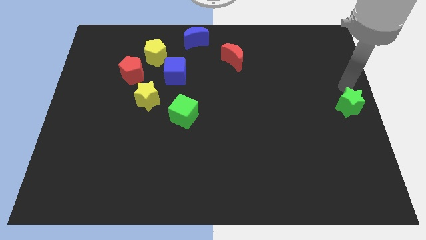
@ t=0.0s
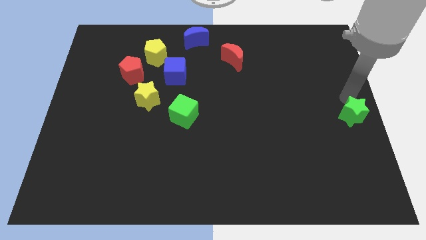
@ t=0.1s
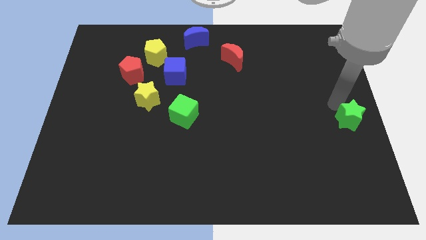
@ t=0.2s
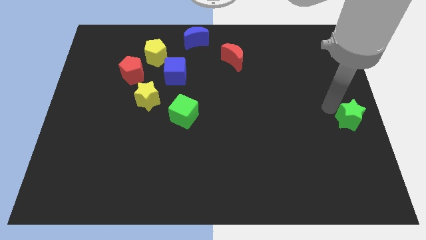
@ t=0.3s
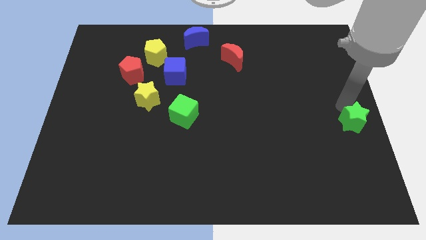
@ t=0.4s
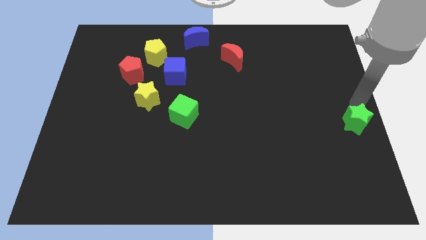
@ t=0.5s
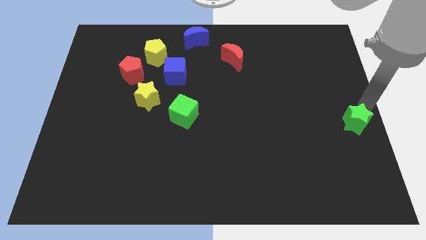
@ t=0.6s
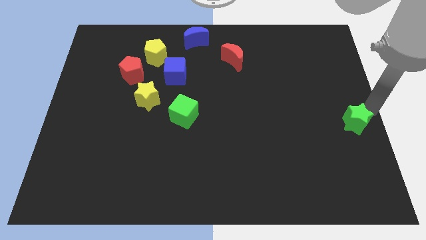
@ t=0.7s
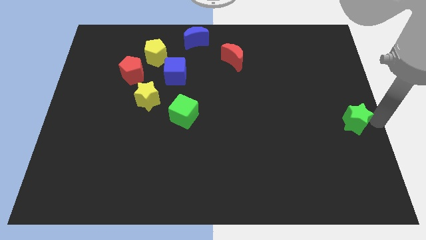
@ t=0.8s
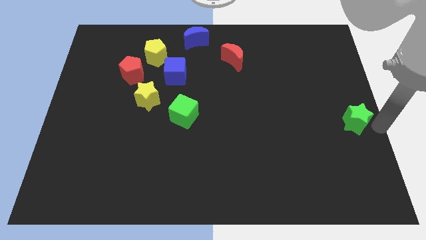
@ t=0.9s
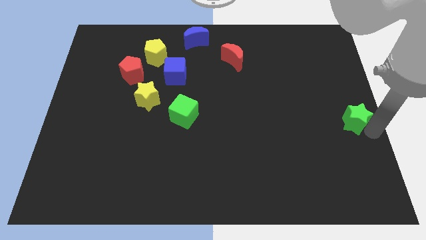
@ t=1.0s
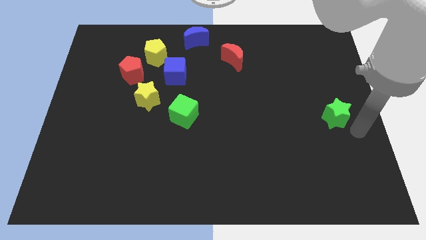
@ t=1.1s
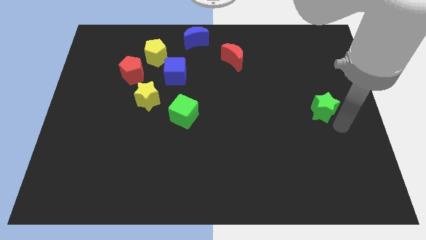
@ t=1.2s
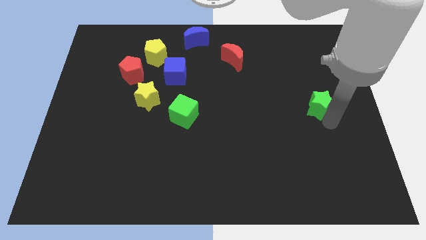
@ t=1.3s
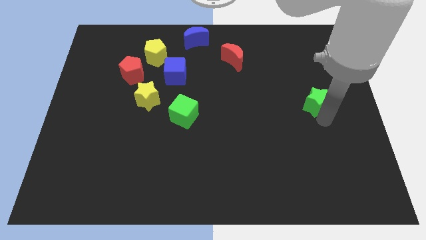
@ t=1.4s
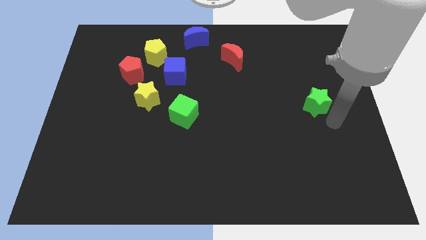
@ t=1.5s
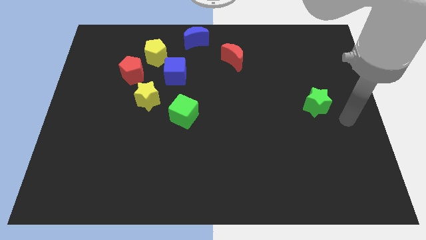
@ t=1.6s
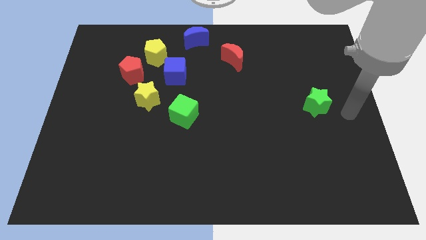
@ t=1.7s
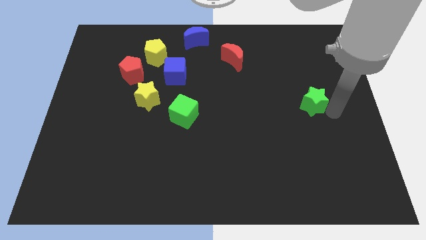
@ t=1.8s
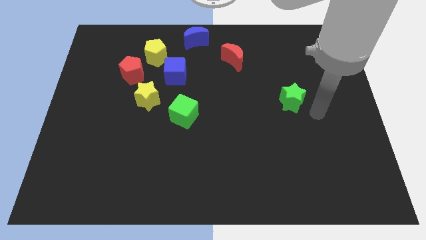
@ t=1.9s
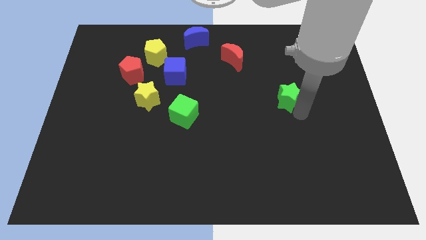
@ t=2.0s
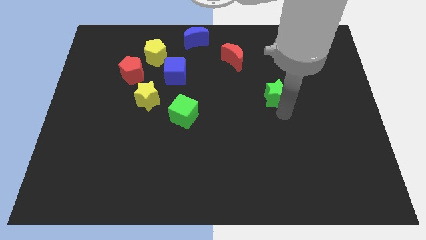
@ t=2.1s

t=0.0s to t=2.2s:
move the green star towards left

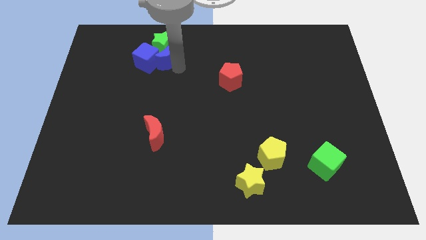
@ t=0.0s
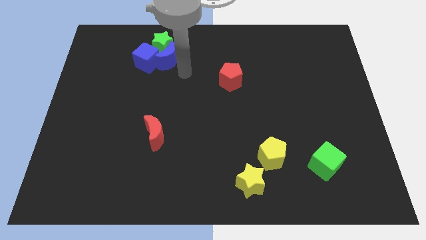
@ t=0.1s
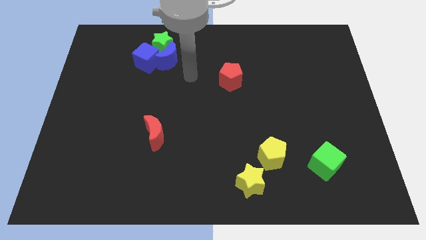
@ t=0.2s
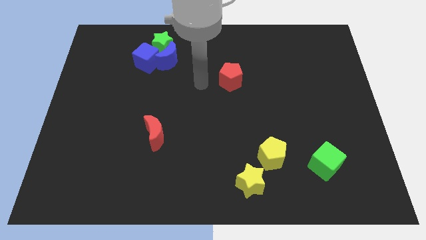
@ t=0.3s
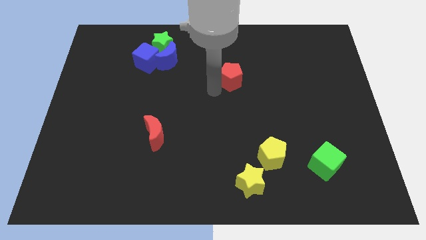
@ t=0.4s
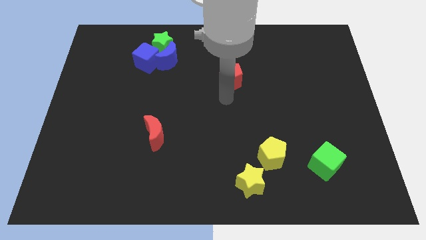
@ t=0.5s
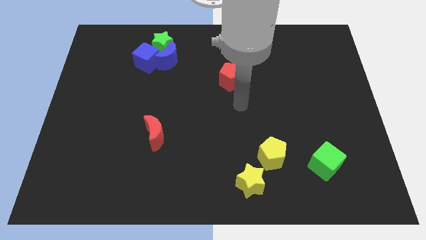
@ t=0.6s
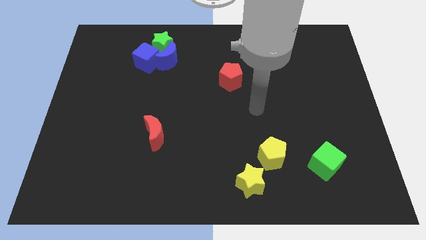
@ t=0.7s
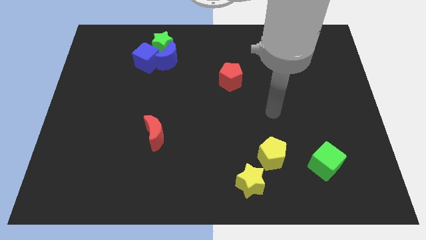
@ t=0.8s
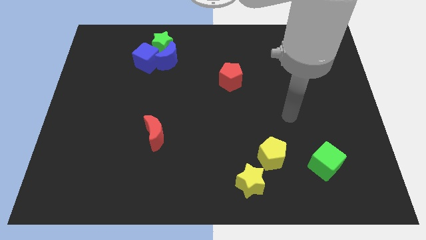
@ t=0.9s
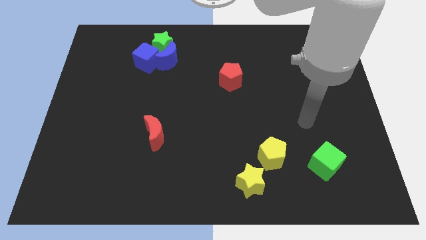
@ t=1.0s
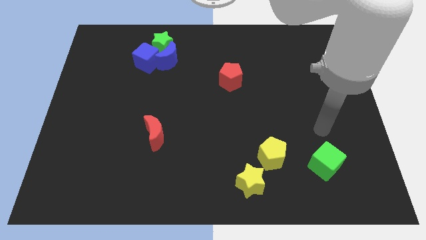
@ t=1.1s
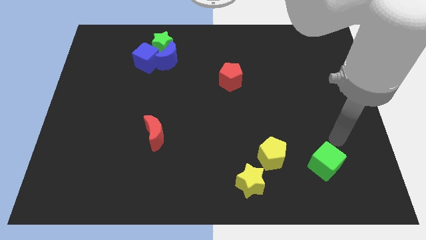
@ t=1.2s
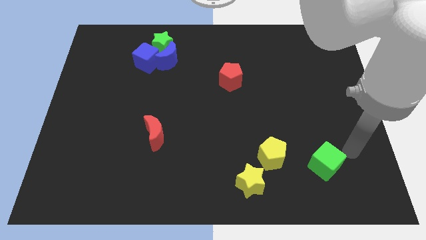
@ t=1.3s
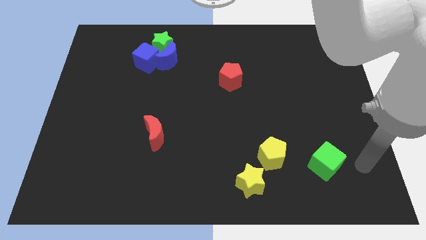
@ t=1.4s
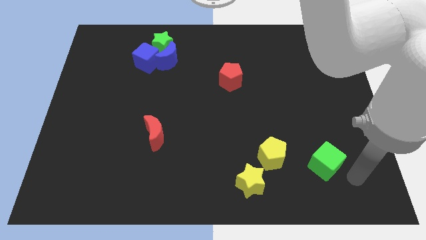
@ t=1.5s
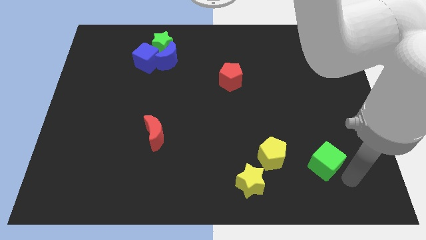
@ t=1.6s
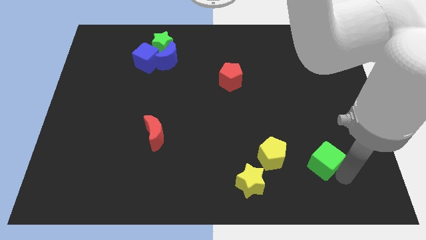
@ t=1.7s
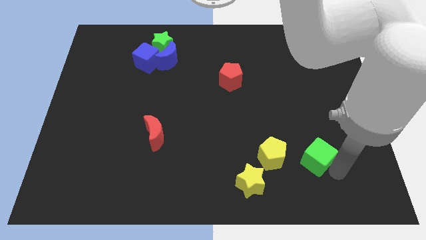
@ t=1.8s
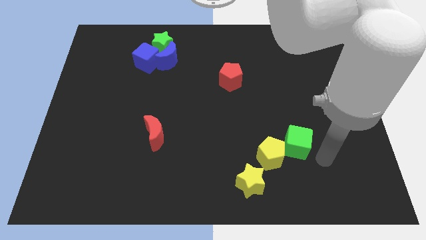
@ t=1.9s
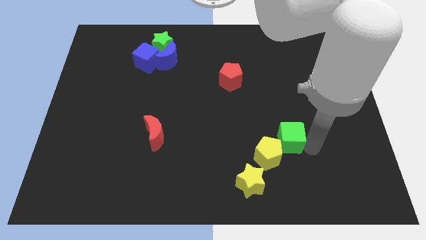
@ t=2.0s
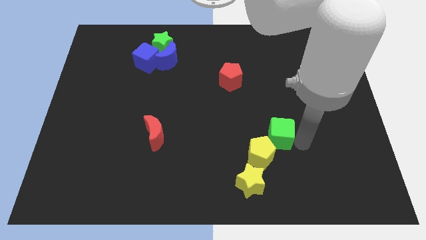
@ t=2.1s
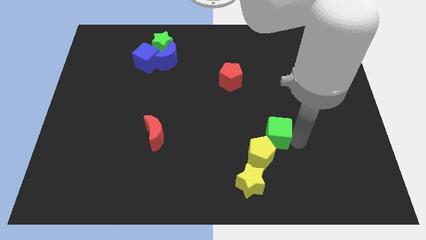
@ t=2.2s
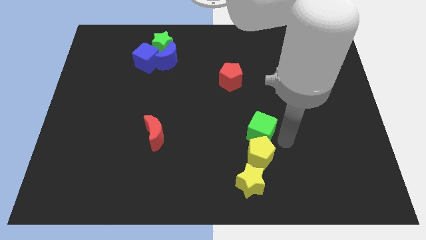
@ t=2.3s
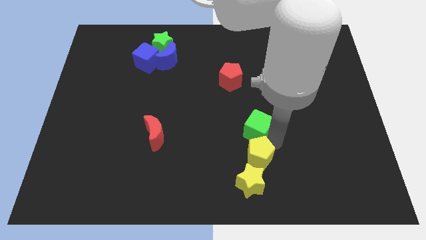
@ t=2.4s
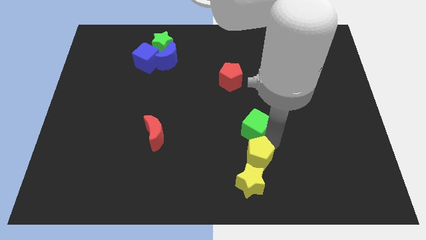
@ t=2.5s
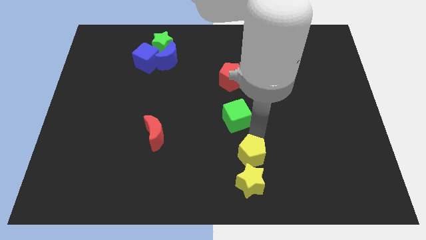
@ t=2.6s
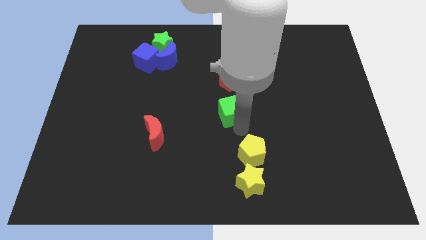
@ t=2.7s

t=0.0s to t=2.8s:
move the green cube to the center of the board

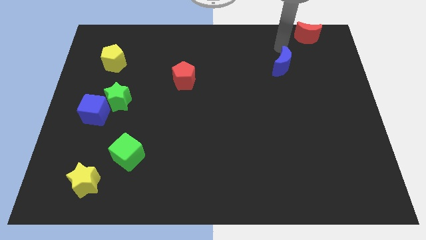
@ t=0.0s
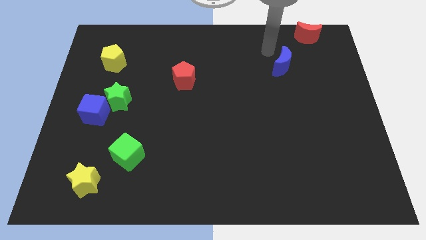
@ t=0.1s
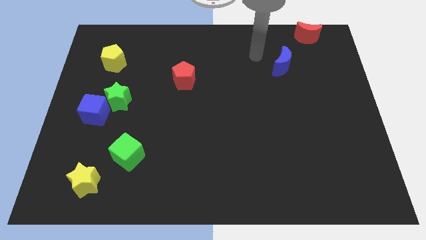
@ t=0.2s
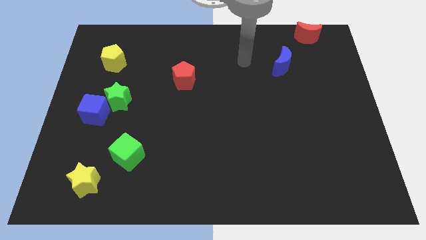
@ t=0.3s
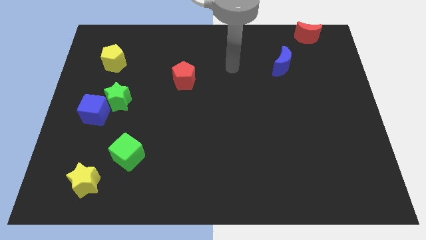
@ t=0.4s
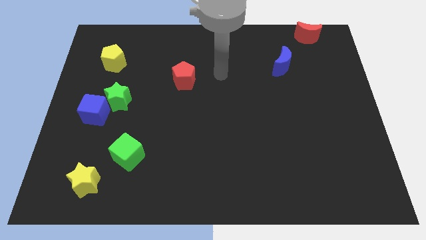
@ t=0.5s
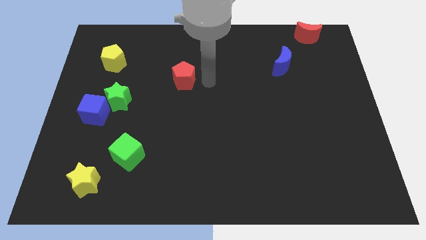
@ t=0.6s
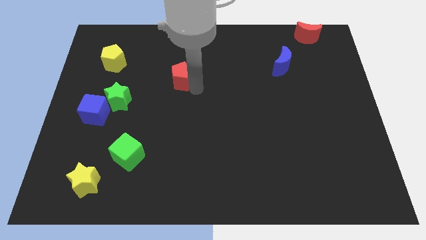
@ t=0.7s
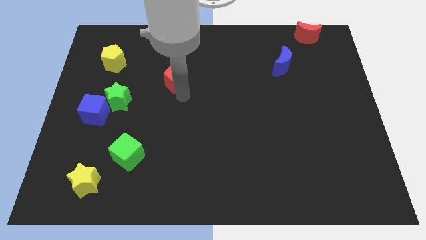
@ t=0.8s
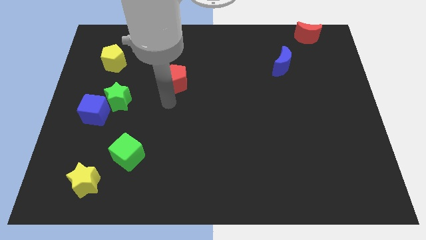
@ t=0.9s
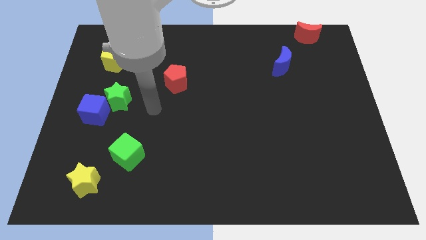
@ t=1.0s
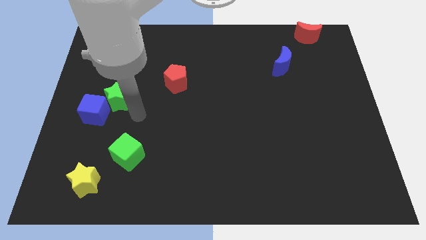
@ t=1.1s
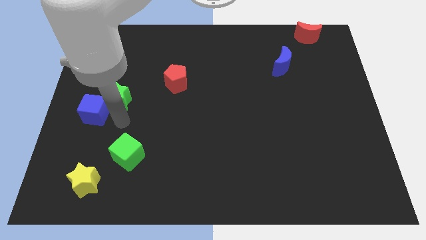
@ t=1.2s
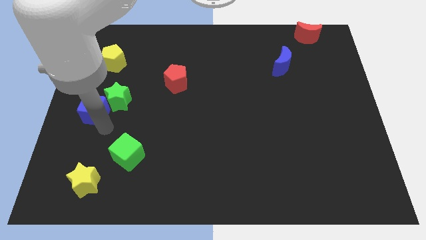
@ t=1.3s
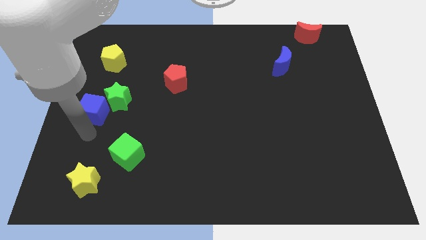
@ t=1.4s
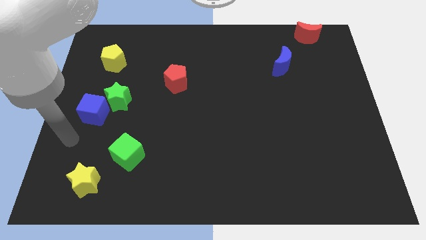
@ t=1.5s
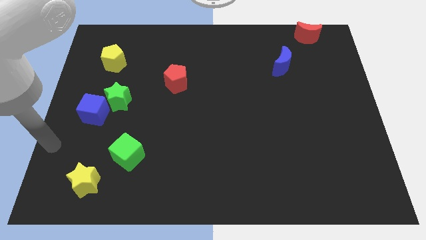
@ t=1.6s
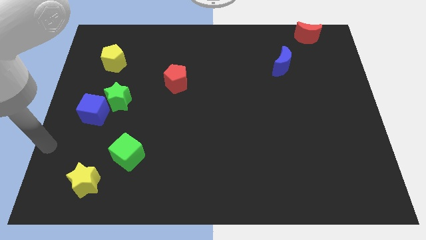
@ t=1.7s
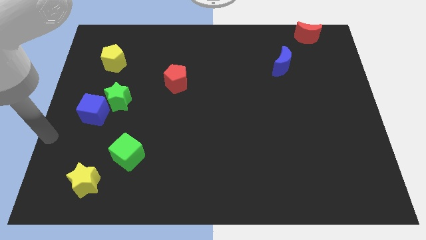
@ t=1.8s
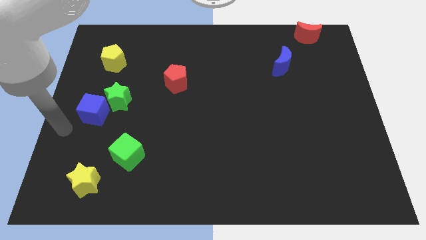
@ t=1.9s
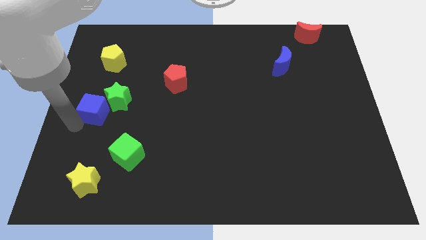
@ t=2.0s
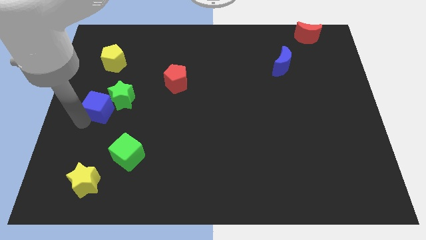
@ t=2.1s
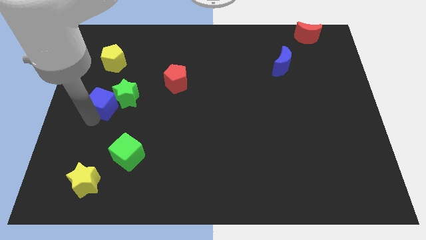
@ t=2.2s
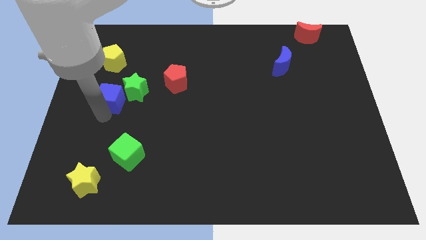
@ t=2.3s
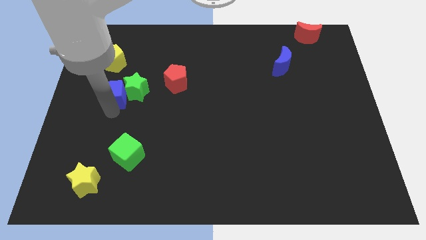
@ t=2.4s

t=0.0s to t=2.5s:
push the blue cube into the green star

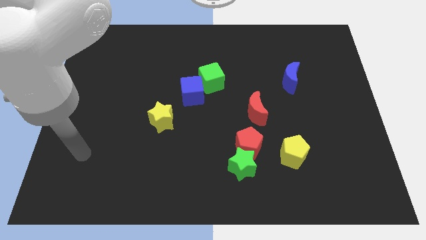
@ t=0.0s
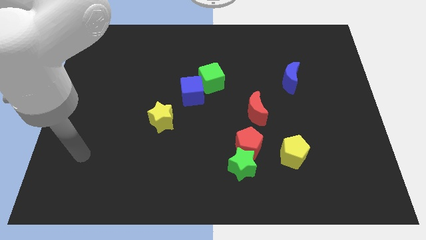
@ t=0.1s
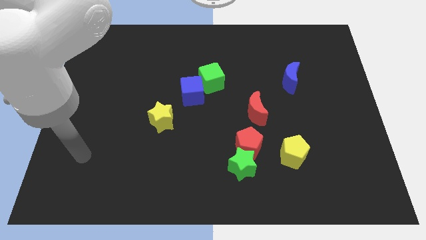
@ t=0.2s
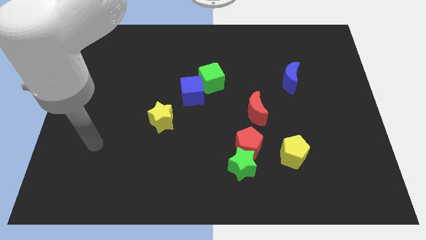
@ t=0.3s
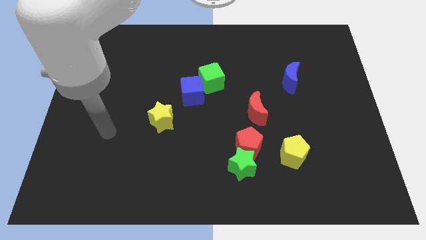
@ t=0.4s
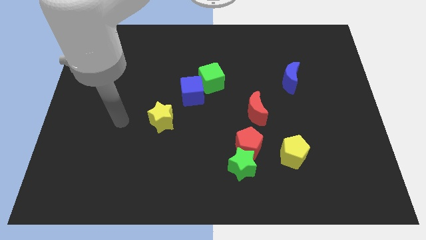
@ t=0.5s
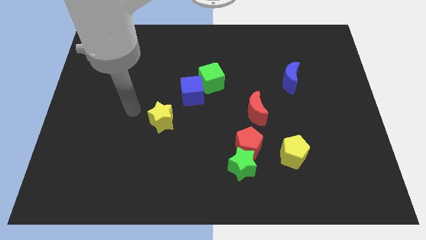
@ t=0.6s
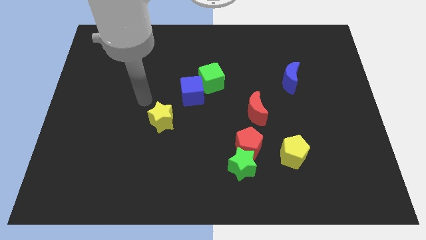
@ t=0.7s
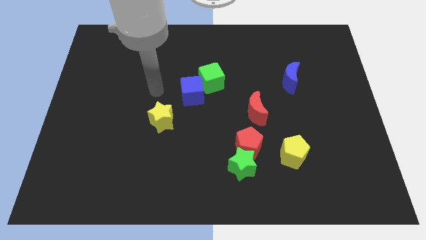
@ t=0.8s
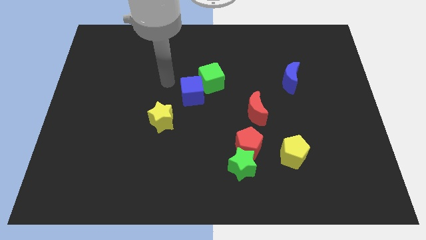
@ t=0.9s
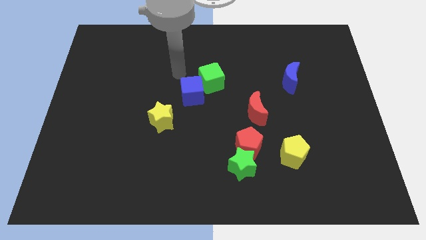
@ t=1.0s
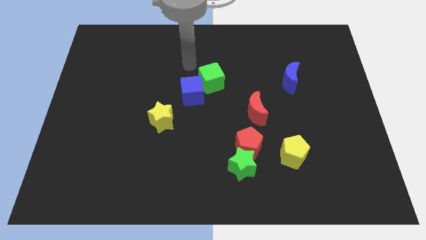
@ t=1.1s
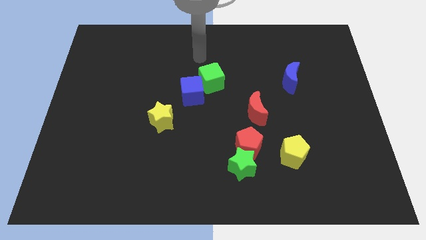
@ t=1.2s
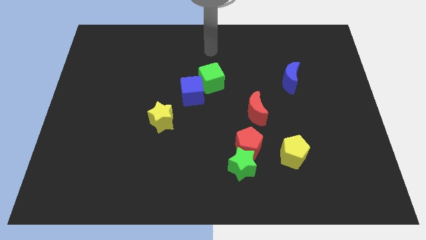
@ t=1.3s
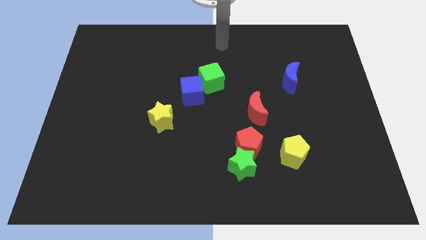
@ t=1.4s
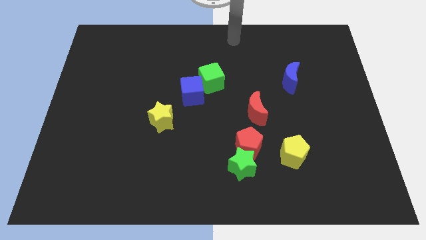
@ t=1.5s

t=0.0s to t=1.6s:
move the arm to the top side
